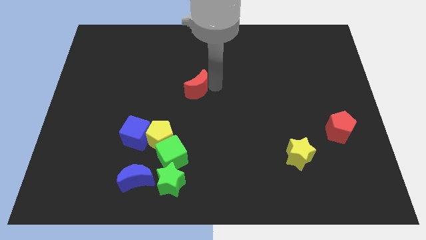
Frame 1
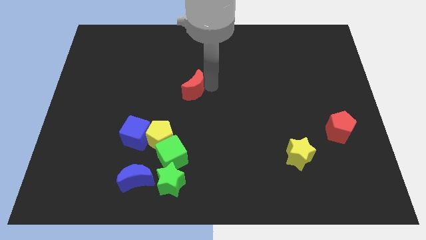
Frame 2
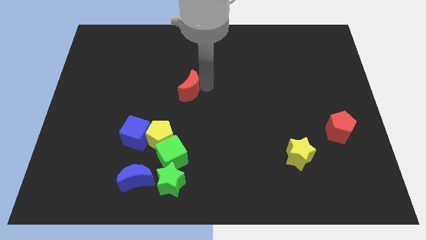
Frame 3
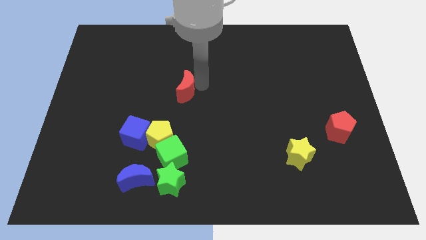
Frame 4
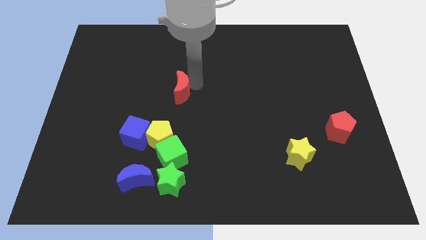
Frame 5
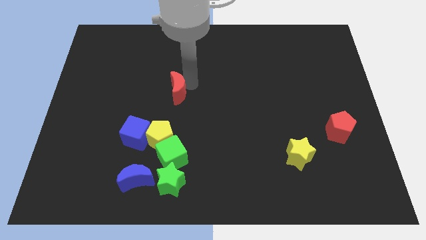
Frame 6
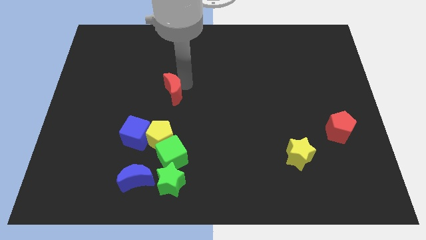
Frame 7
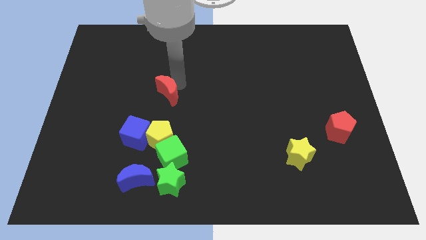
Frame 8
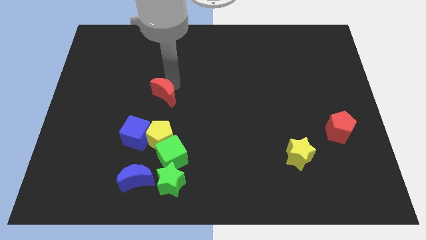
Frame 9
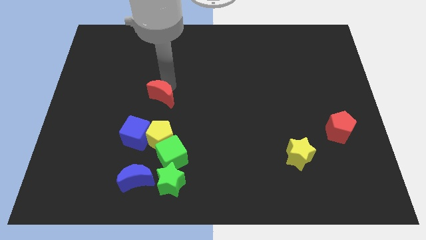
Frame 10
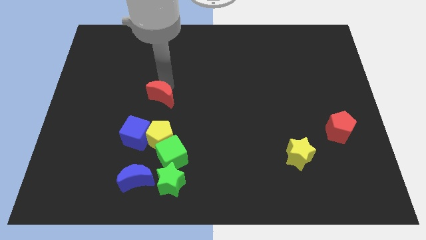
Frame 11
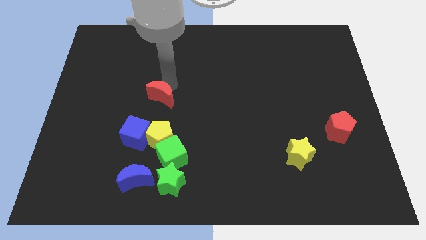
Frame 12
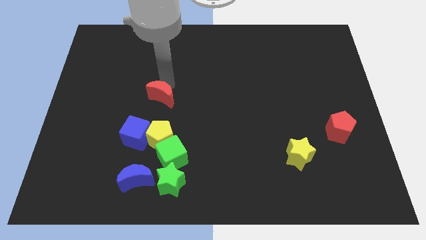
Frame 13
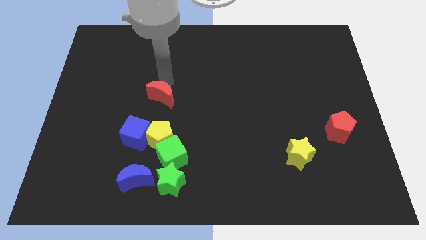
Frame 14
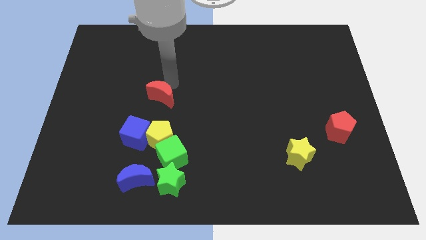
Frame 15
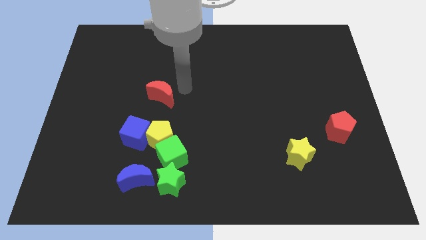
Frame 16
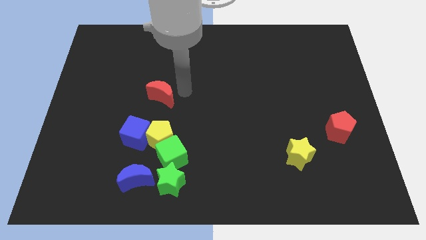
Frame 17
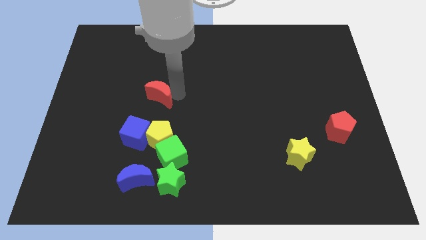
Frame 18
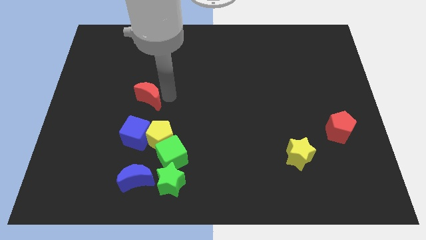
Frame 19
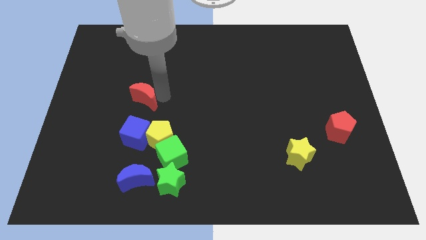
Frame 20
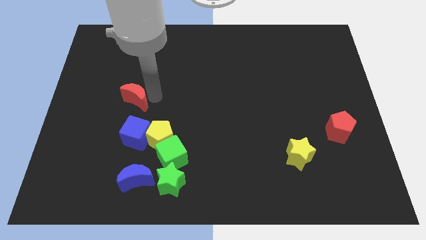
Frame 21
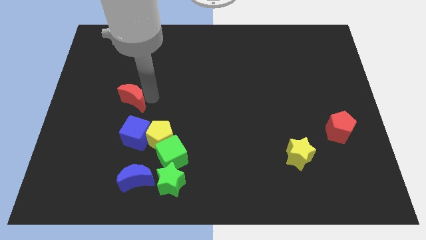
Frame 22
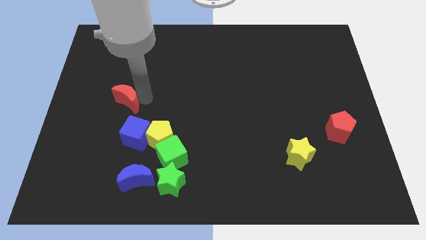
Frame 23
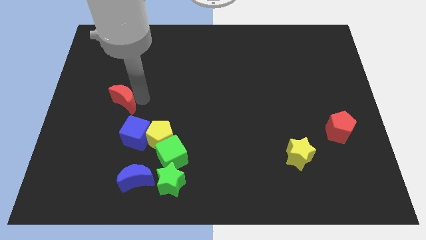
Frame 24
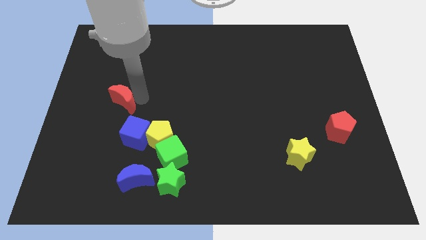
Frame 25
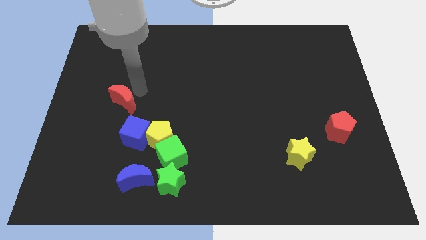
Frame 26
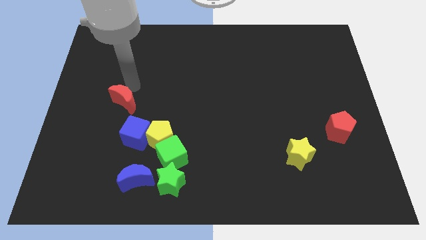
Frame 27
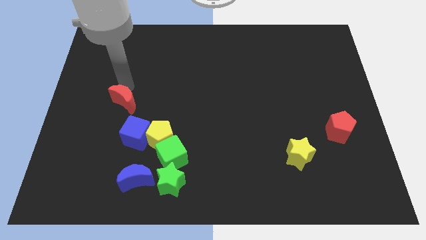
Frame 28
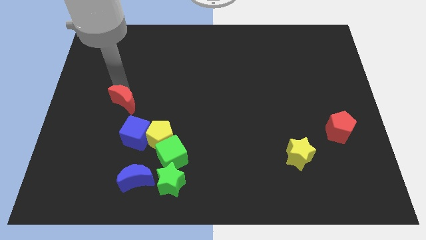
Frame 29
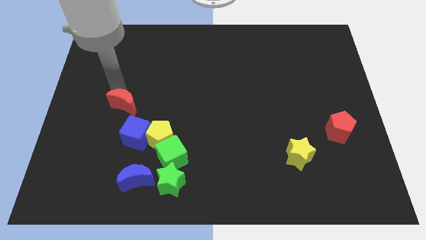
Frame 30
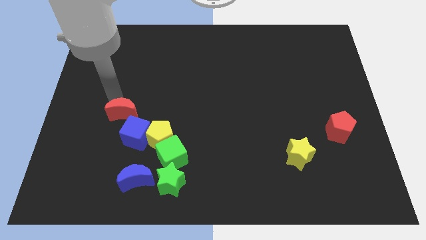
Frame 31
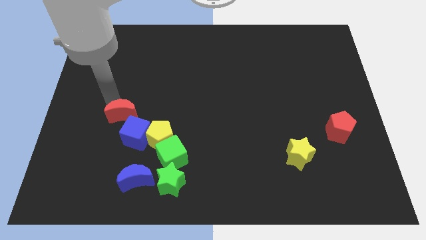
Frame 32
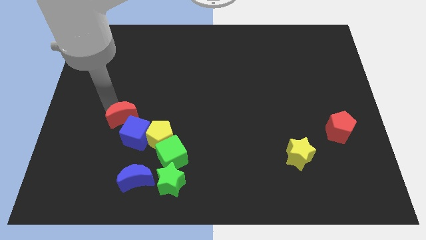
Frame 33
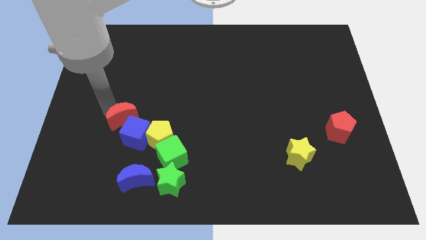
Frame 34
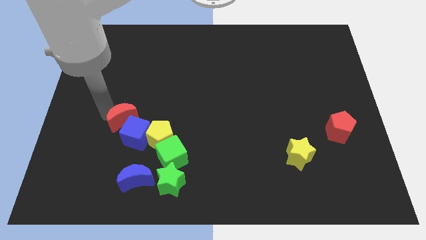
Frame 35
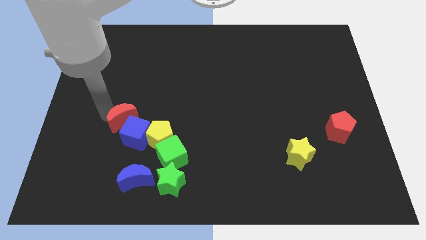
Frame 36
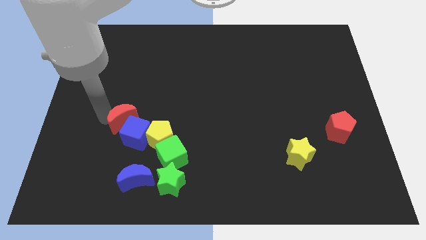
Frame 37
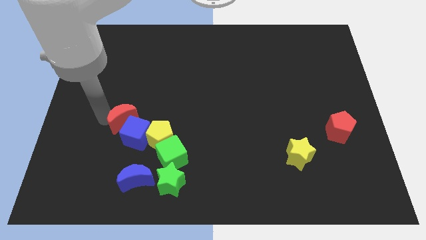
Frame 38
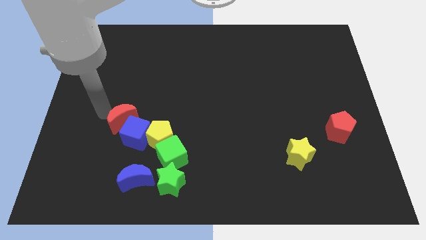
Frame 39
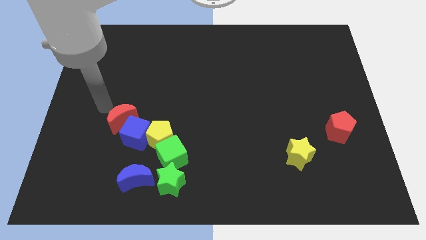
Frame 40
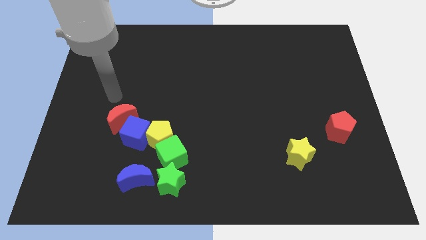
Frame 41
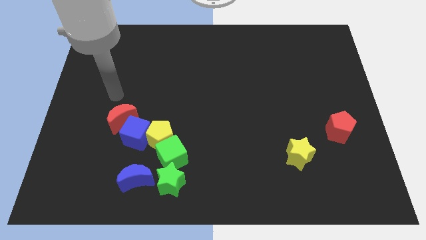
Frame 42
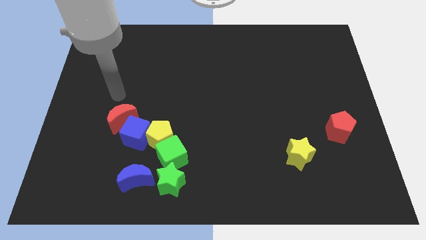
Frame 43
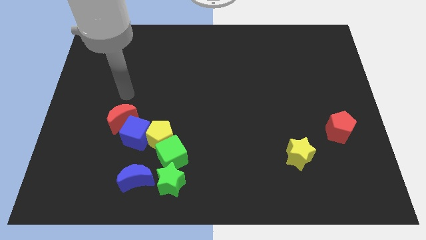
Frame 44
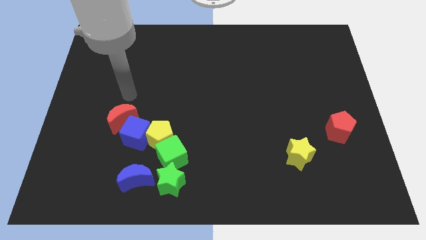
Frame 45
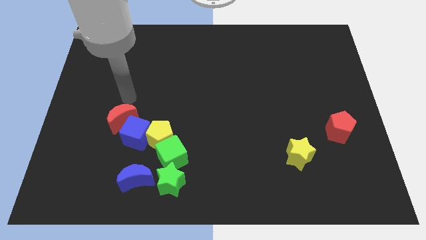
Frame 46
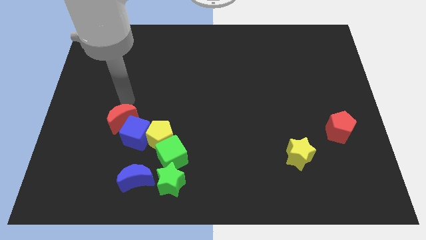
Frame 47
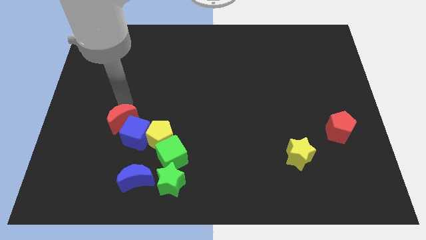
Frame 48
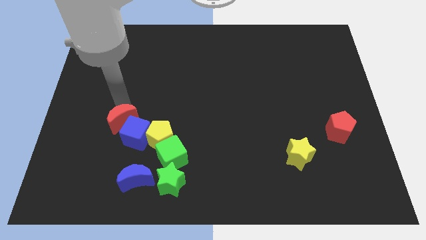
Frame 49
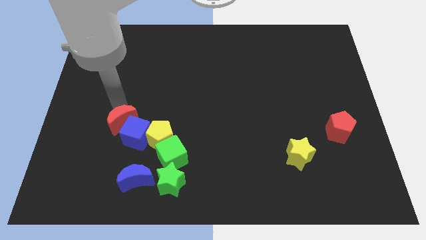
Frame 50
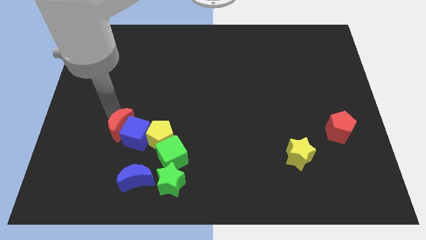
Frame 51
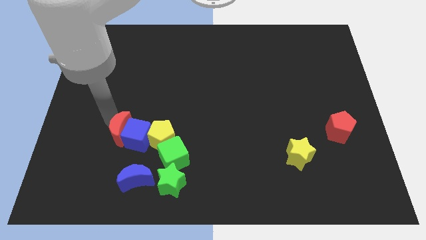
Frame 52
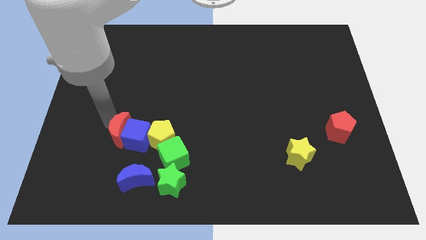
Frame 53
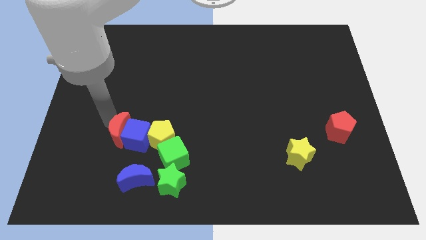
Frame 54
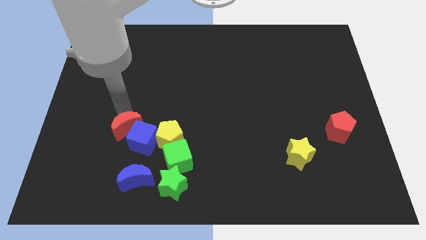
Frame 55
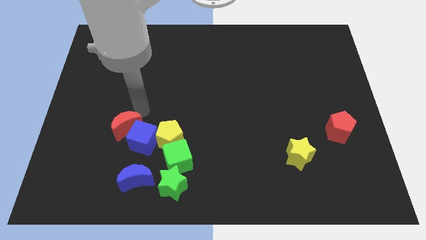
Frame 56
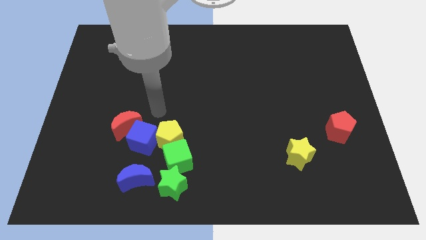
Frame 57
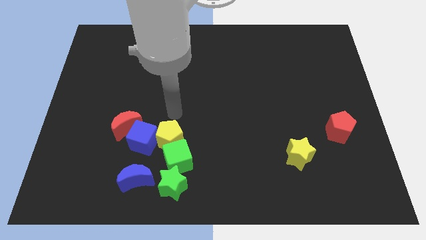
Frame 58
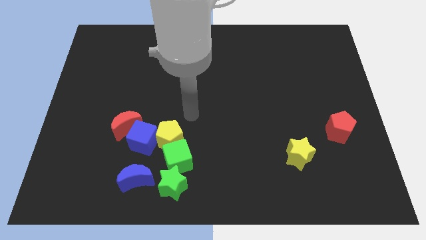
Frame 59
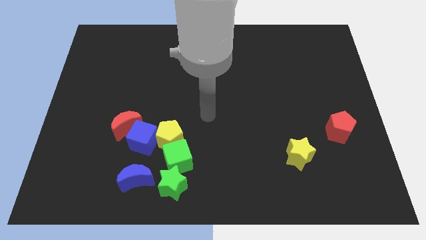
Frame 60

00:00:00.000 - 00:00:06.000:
push the red moon into the group of blocks

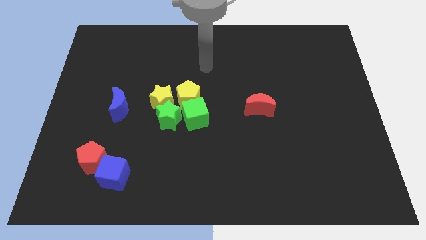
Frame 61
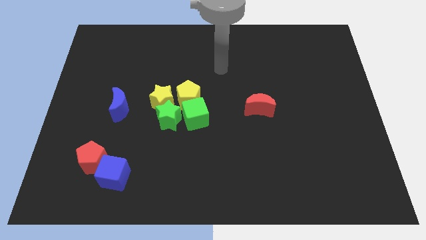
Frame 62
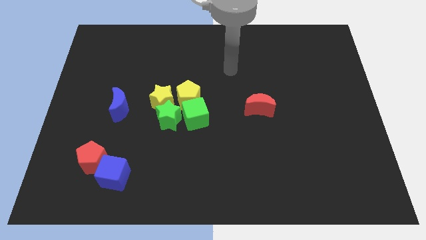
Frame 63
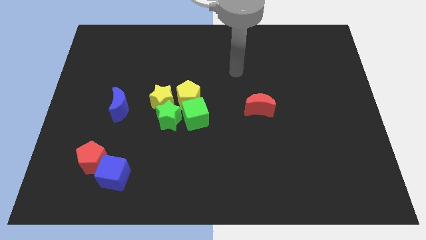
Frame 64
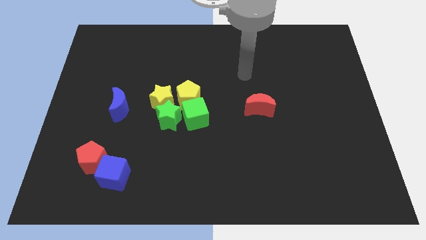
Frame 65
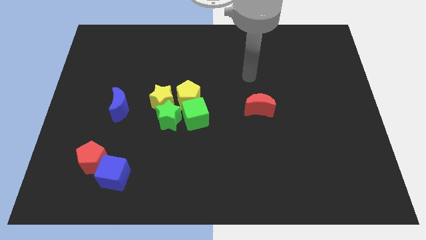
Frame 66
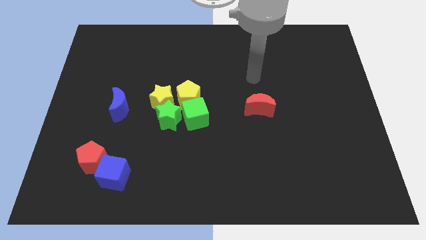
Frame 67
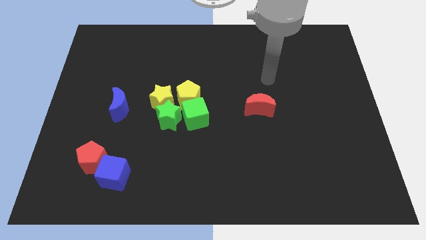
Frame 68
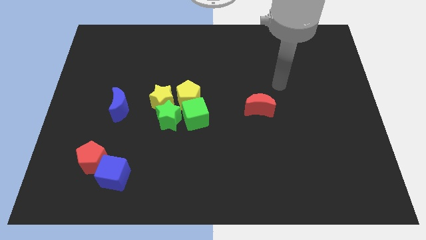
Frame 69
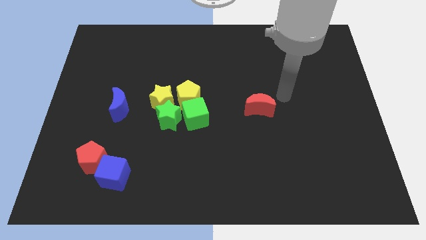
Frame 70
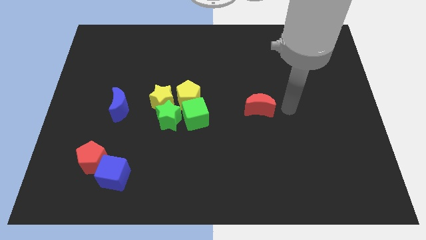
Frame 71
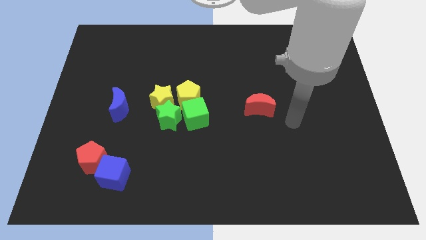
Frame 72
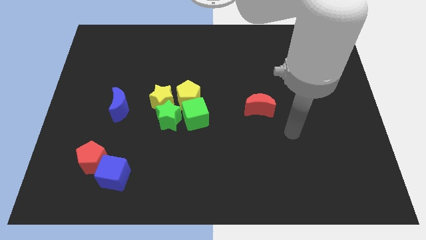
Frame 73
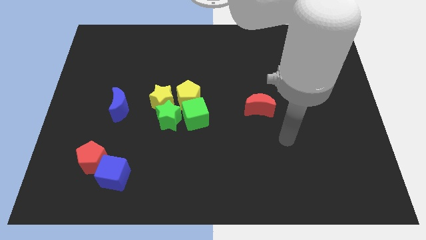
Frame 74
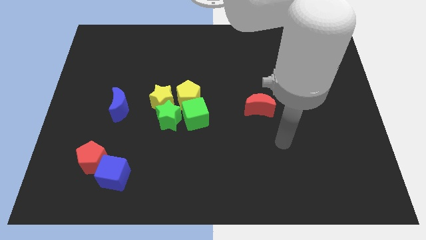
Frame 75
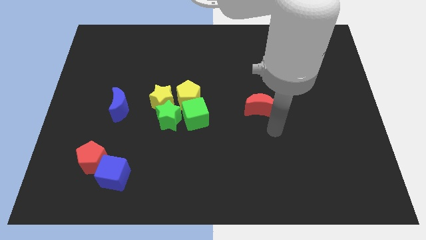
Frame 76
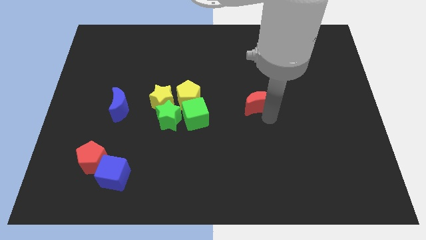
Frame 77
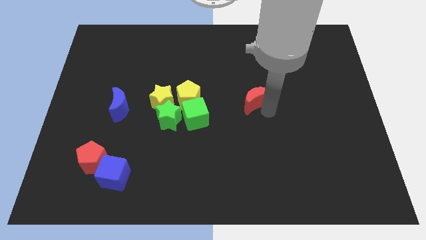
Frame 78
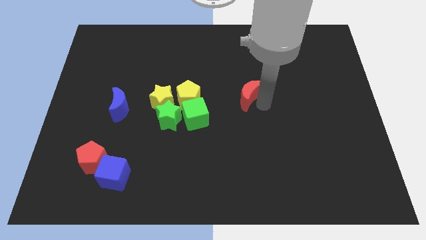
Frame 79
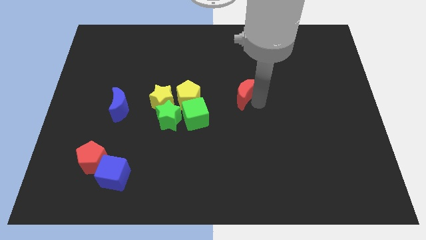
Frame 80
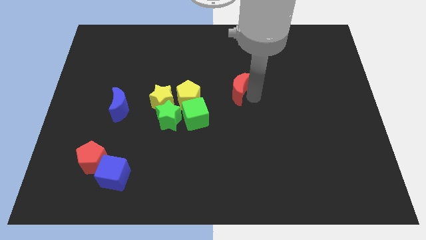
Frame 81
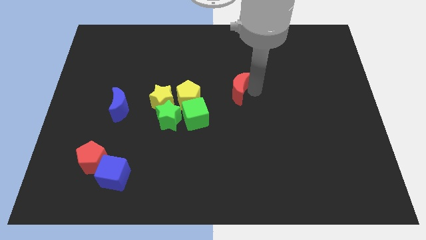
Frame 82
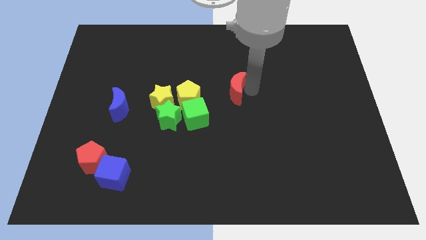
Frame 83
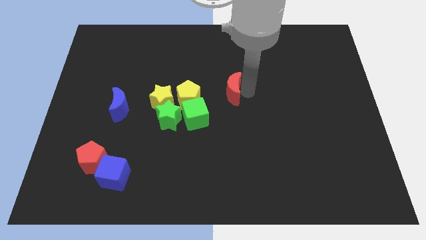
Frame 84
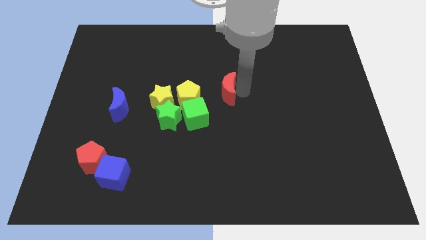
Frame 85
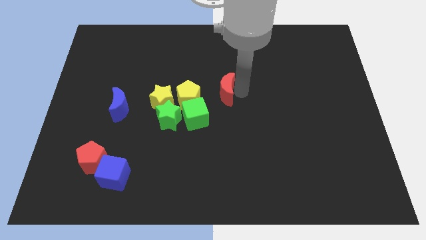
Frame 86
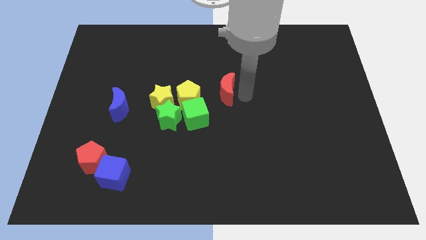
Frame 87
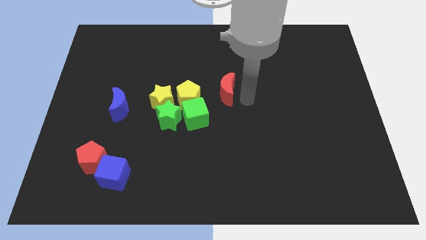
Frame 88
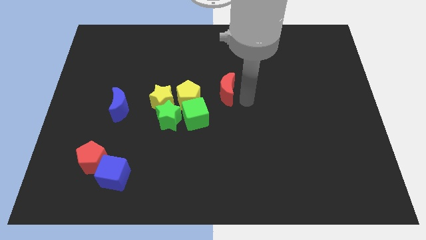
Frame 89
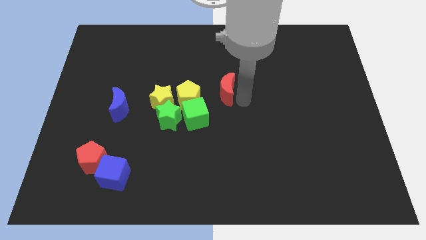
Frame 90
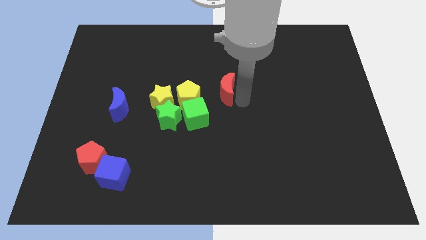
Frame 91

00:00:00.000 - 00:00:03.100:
place red moon to right of yellow pentagon
